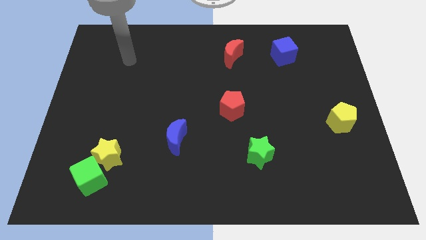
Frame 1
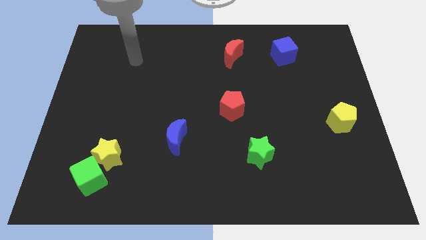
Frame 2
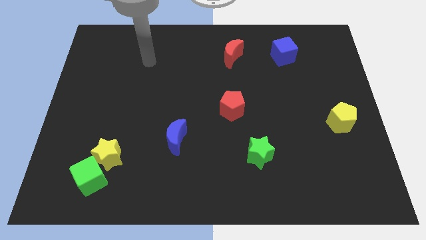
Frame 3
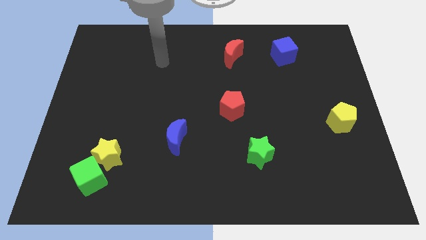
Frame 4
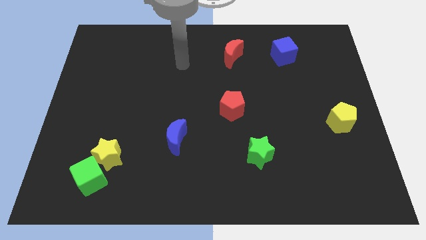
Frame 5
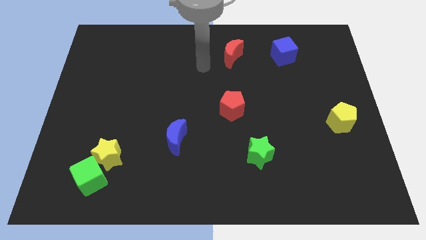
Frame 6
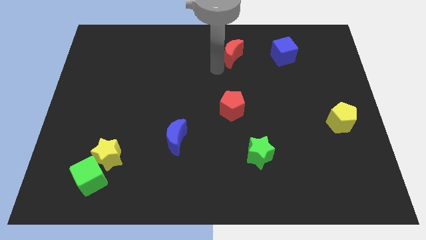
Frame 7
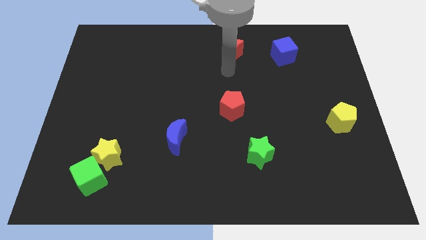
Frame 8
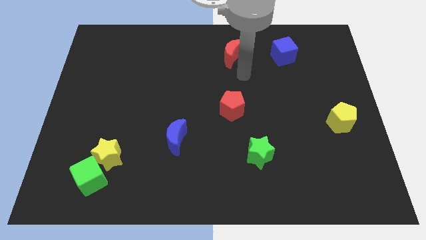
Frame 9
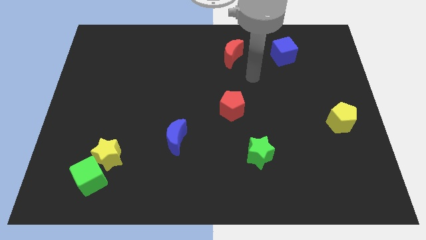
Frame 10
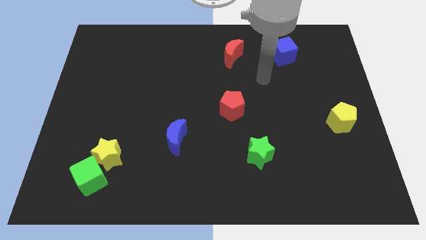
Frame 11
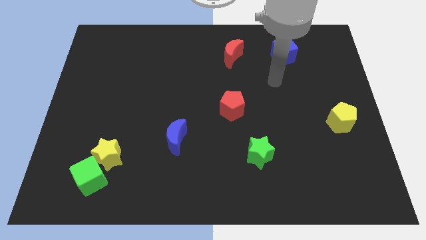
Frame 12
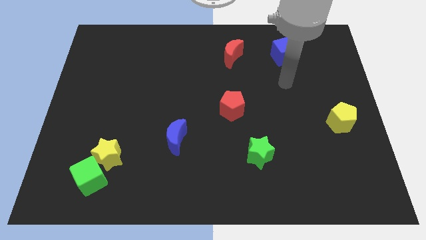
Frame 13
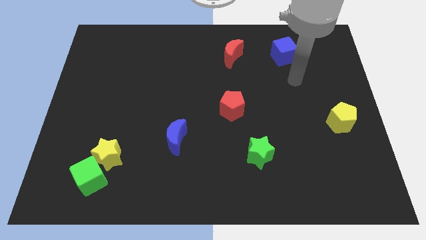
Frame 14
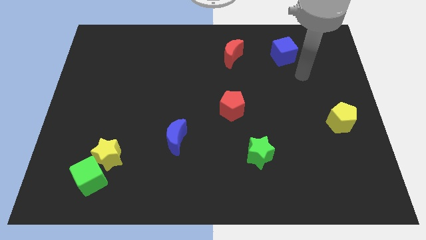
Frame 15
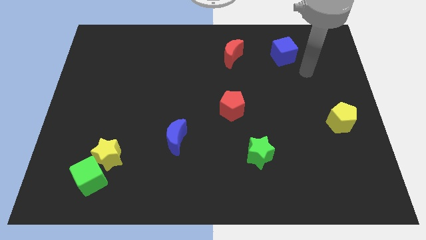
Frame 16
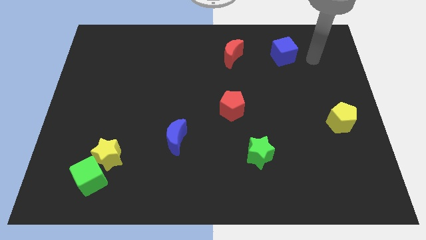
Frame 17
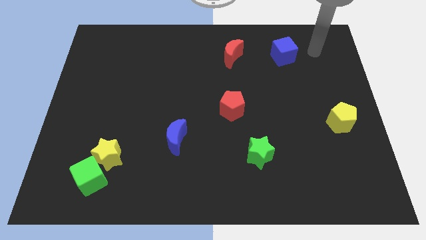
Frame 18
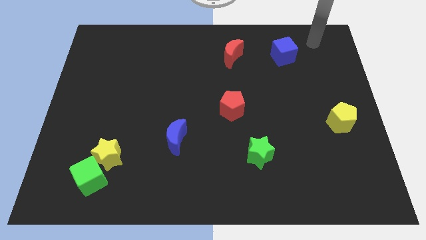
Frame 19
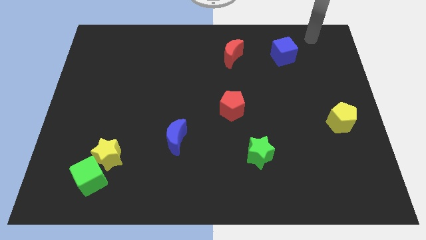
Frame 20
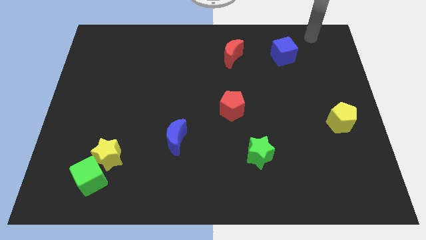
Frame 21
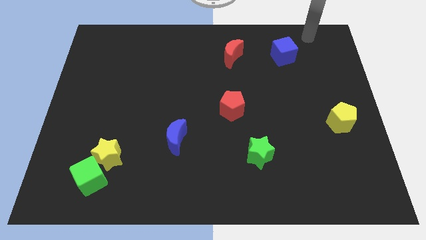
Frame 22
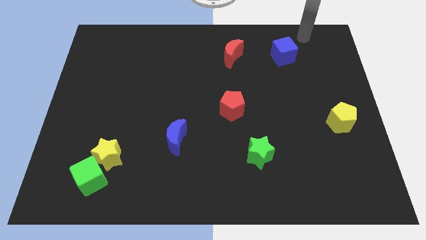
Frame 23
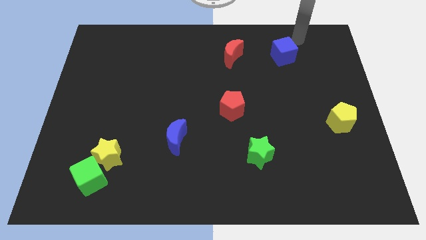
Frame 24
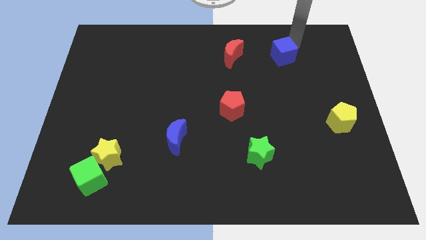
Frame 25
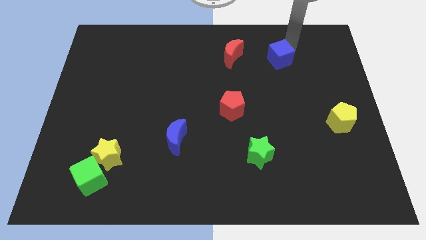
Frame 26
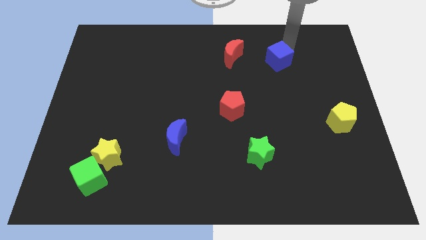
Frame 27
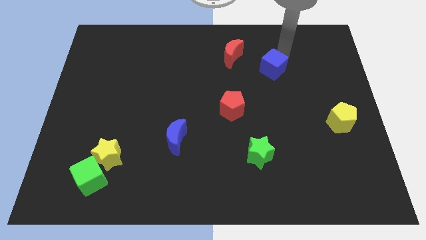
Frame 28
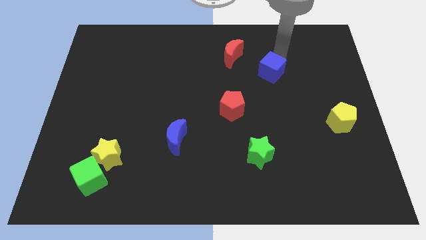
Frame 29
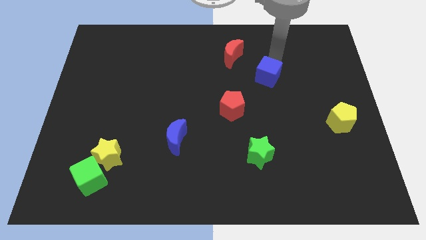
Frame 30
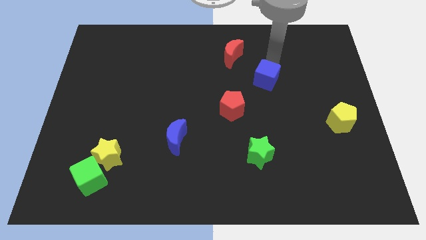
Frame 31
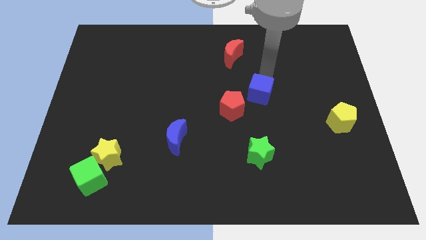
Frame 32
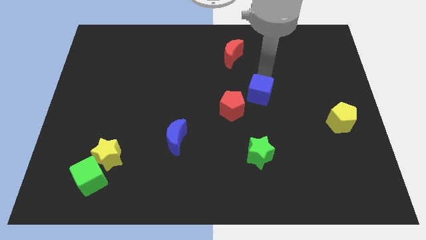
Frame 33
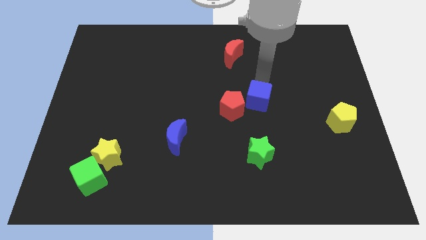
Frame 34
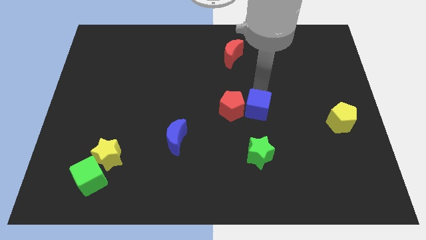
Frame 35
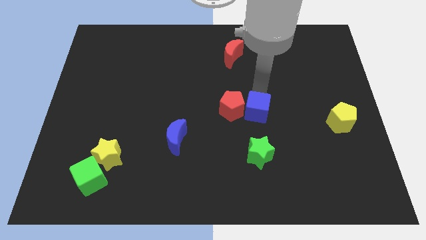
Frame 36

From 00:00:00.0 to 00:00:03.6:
put the blue cube close to the red pentagon

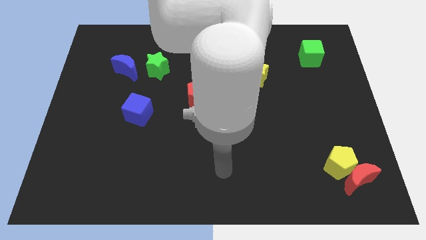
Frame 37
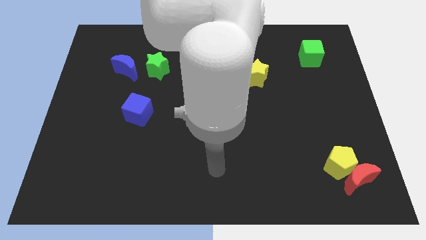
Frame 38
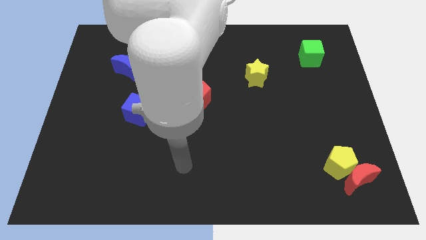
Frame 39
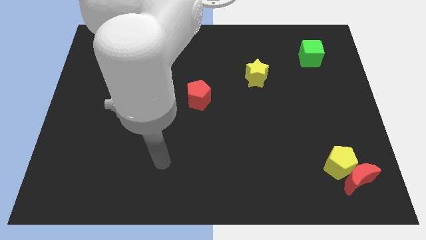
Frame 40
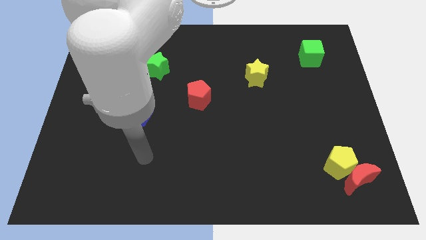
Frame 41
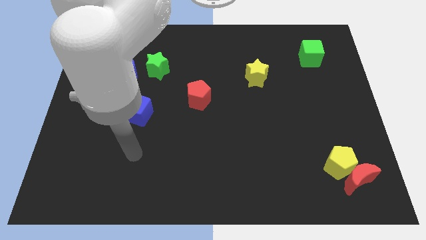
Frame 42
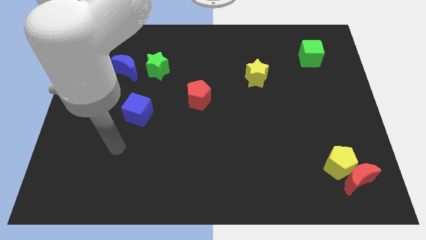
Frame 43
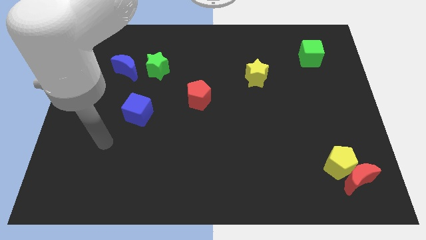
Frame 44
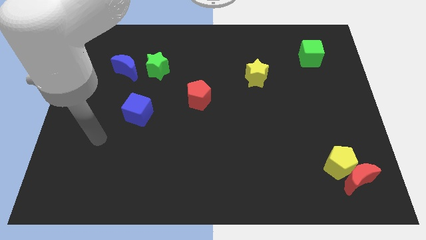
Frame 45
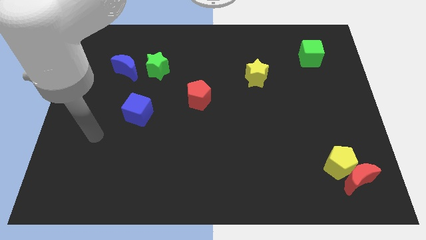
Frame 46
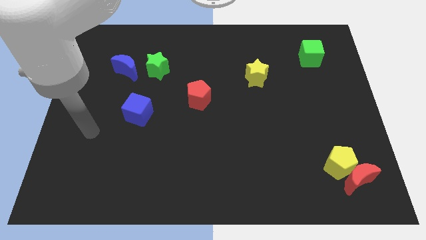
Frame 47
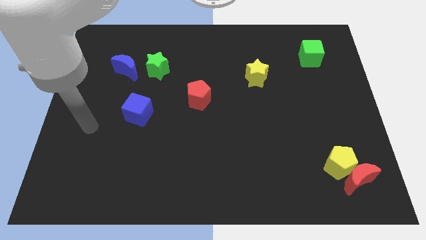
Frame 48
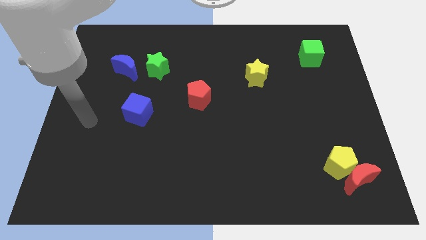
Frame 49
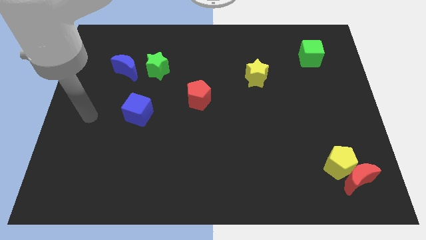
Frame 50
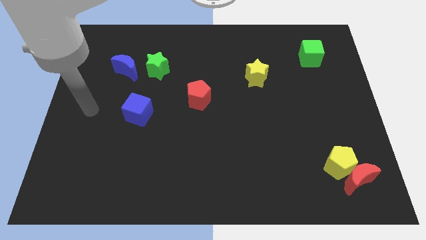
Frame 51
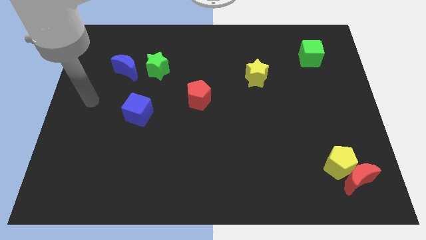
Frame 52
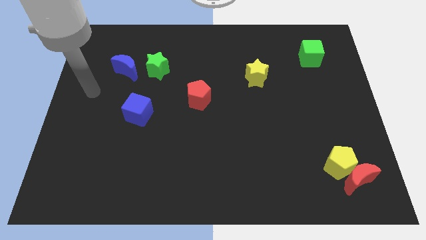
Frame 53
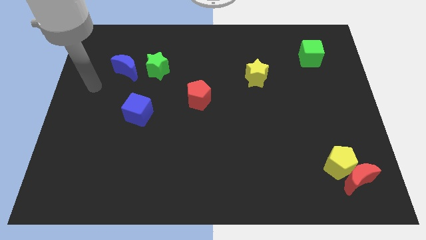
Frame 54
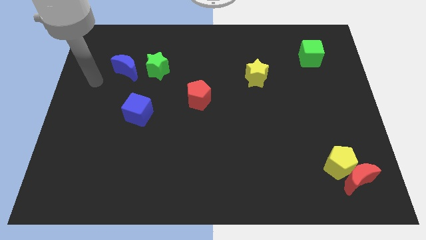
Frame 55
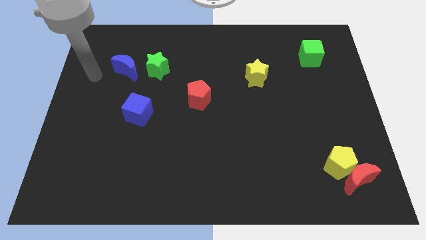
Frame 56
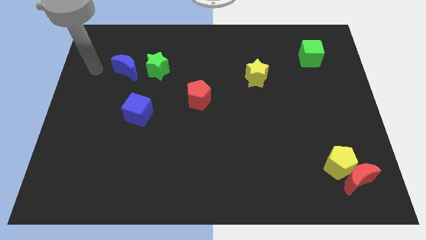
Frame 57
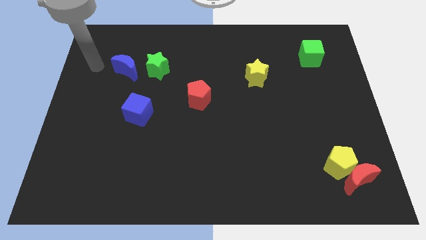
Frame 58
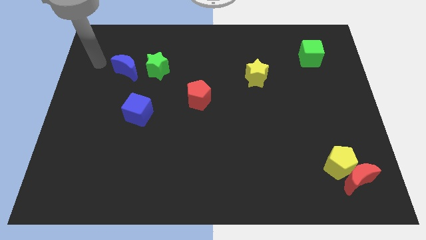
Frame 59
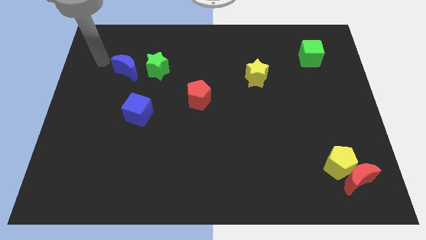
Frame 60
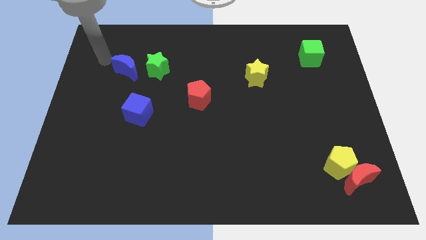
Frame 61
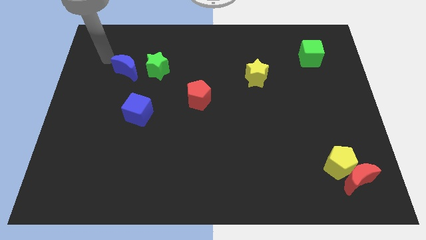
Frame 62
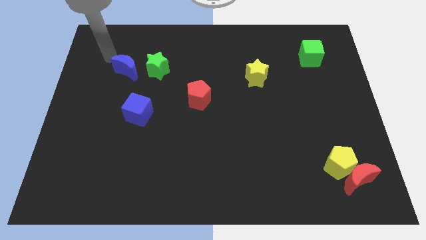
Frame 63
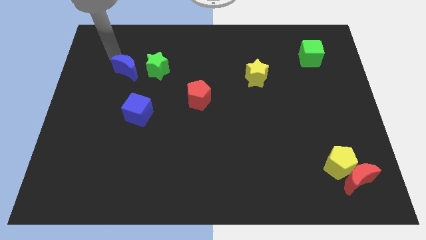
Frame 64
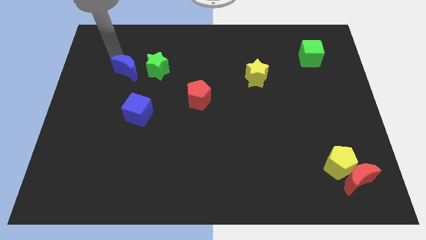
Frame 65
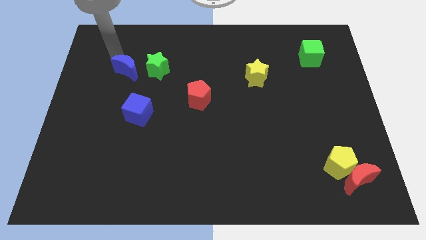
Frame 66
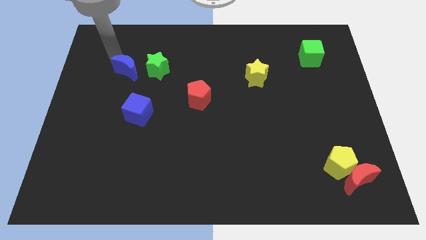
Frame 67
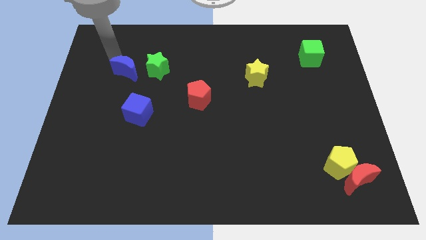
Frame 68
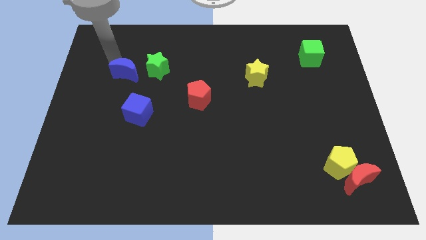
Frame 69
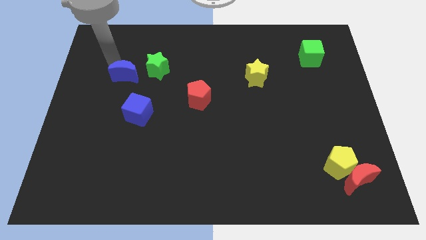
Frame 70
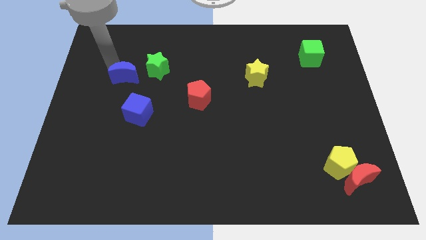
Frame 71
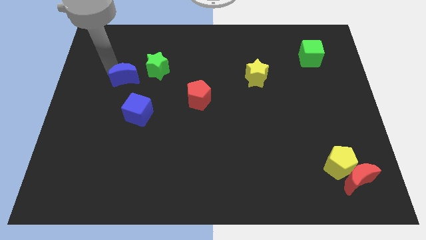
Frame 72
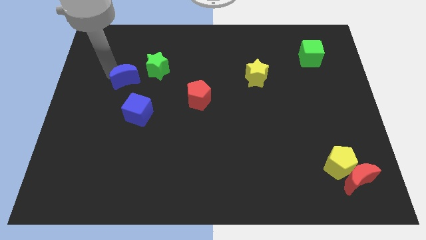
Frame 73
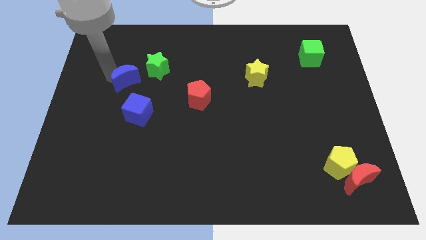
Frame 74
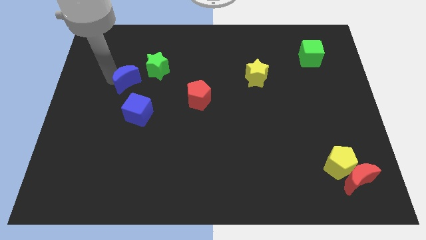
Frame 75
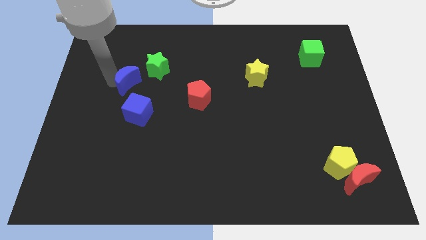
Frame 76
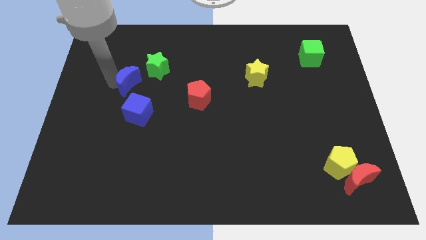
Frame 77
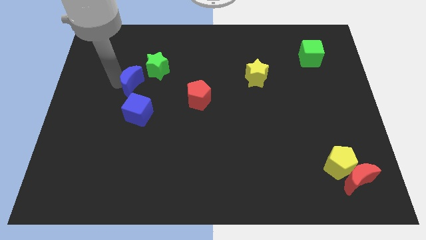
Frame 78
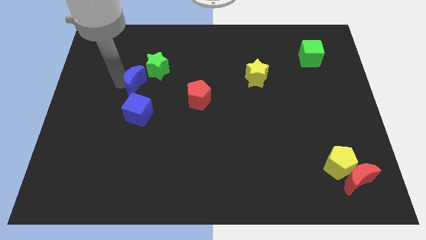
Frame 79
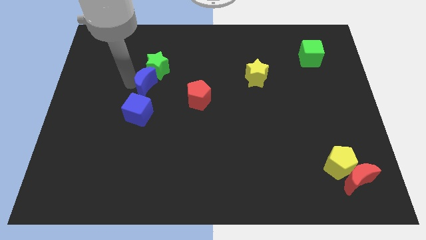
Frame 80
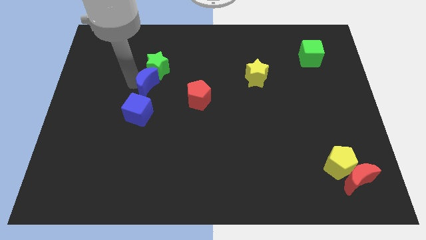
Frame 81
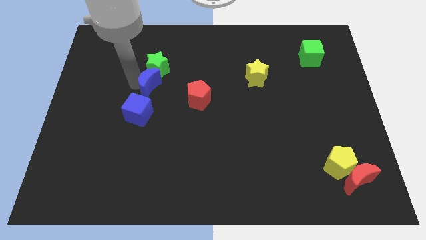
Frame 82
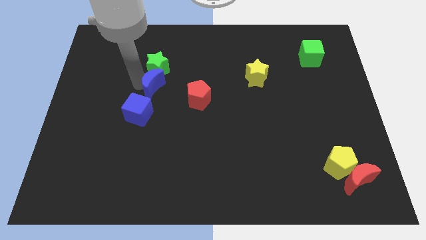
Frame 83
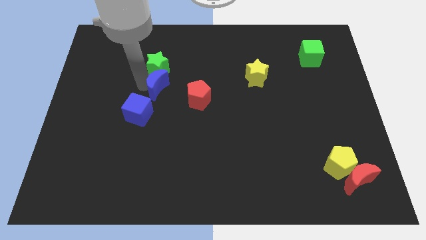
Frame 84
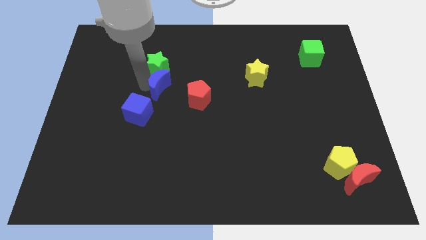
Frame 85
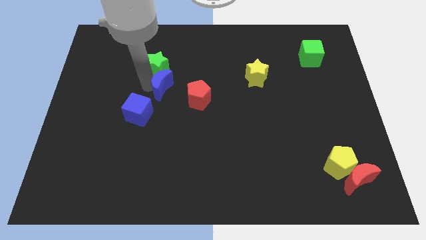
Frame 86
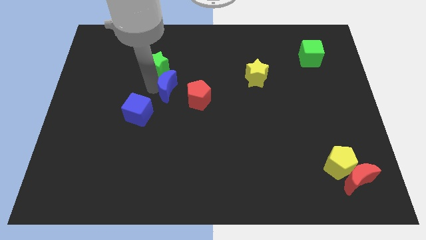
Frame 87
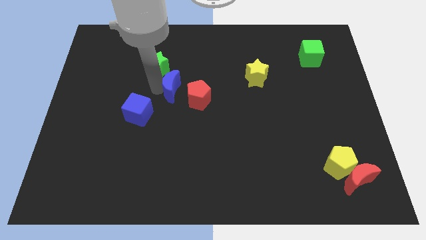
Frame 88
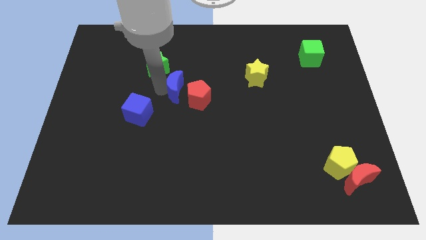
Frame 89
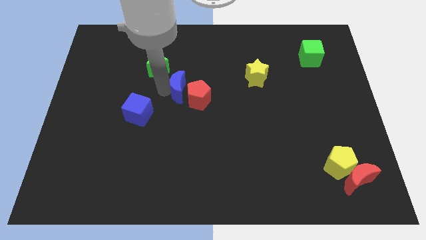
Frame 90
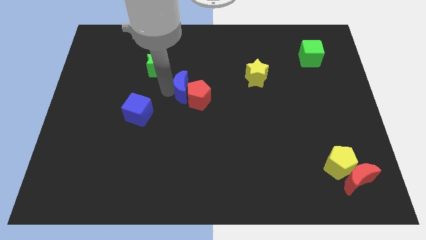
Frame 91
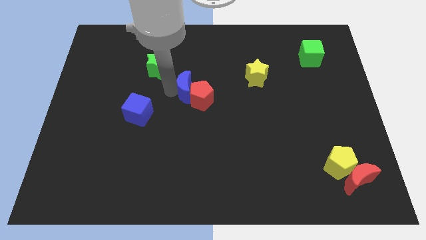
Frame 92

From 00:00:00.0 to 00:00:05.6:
put the blue moon close to the red pentagon
